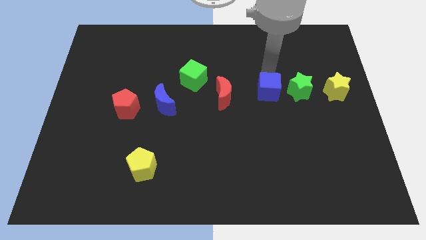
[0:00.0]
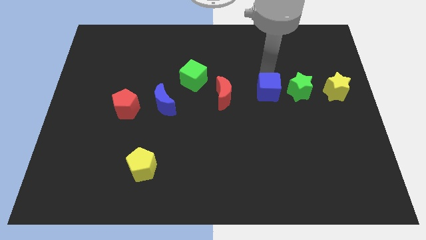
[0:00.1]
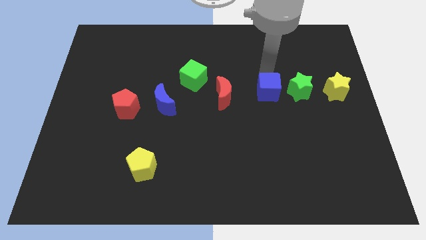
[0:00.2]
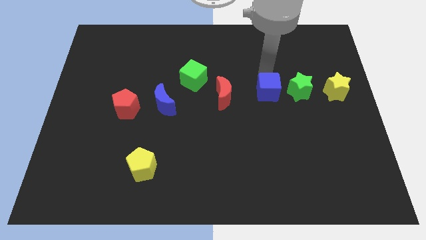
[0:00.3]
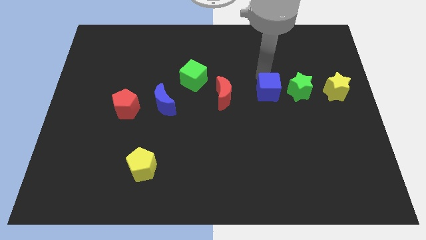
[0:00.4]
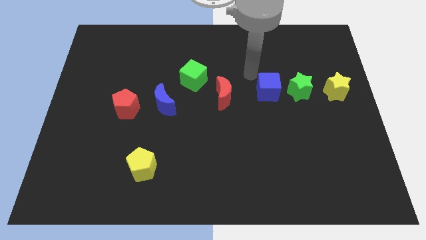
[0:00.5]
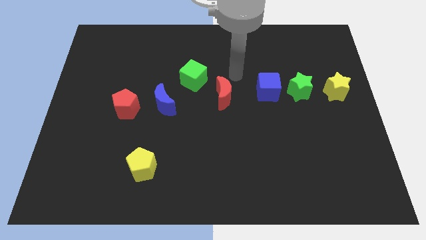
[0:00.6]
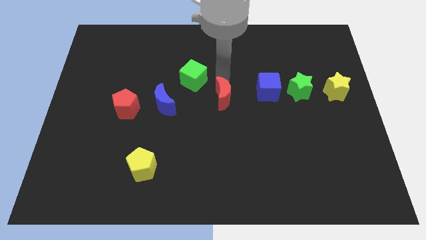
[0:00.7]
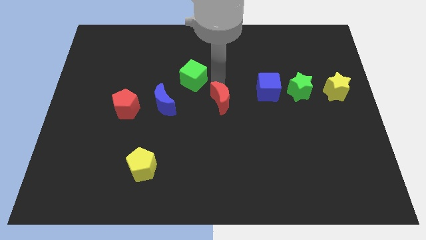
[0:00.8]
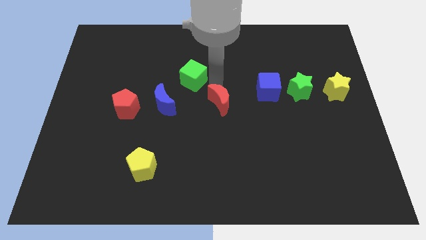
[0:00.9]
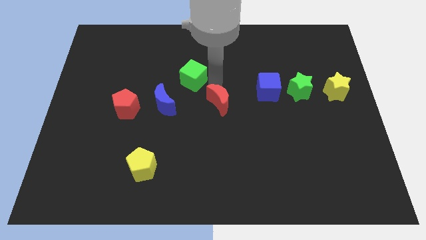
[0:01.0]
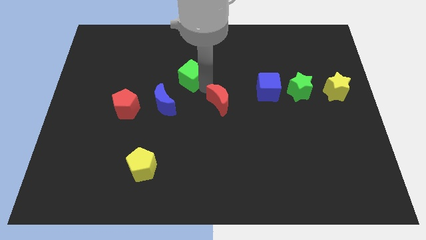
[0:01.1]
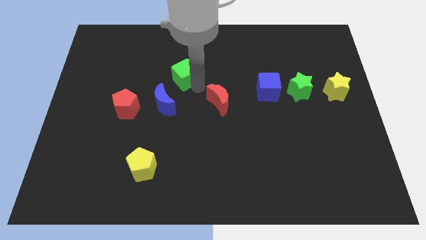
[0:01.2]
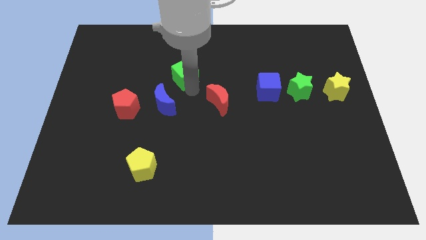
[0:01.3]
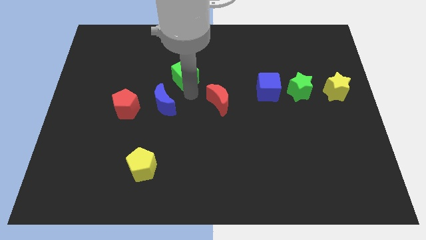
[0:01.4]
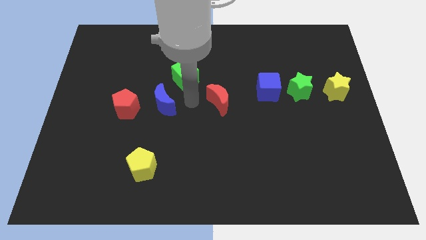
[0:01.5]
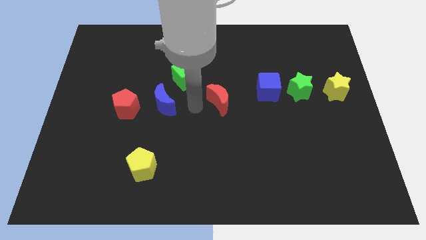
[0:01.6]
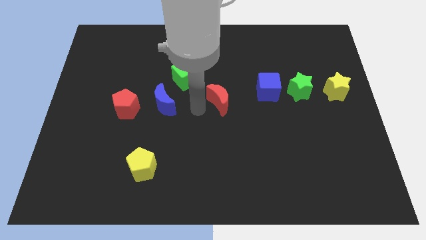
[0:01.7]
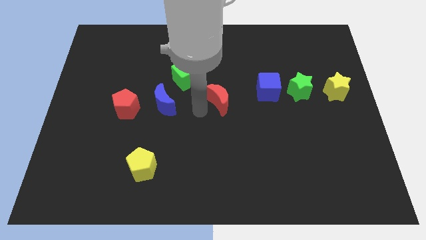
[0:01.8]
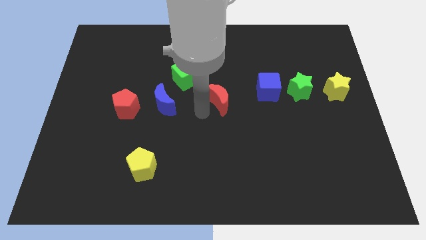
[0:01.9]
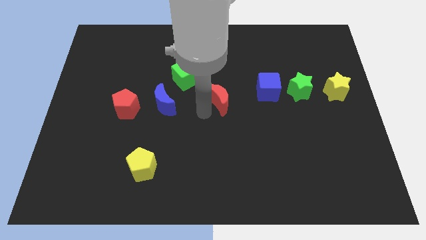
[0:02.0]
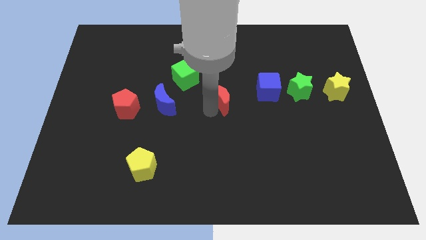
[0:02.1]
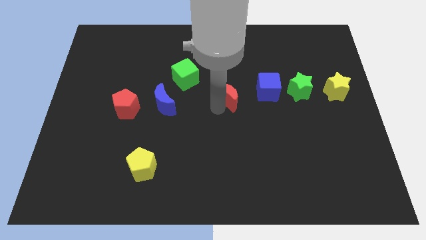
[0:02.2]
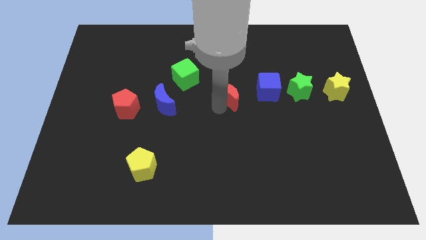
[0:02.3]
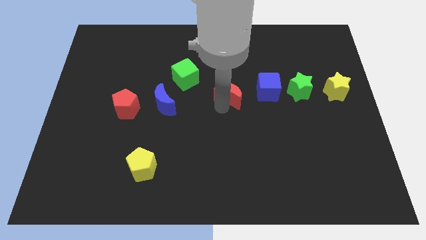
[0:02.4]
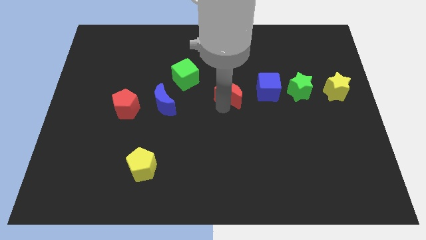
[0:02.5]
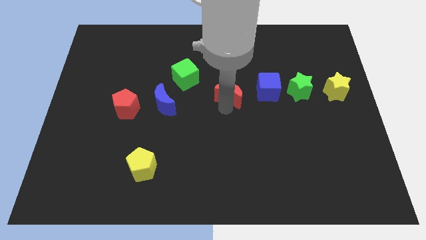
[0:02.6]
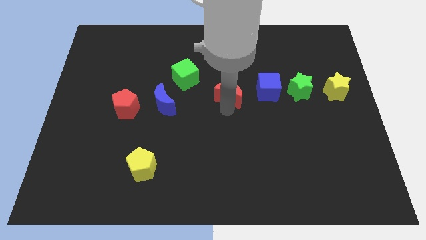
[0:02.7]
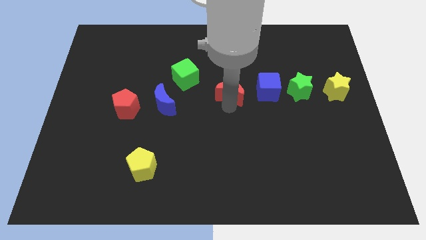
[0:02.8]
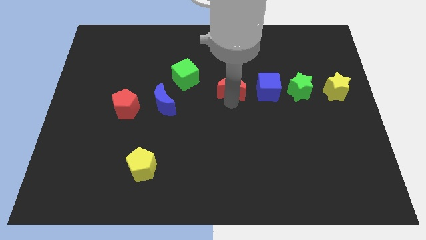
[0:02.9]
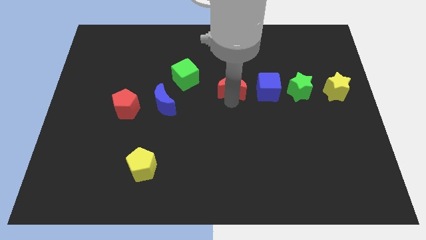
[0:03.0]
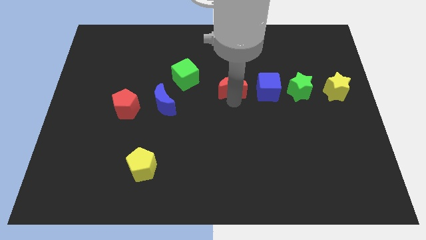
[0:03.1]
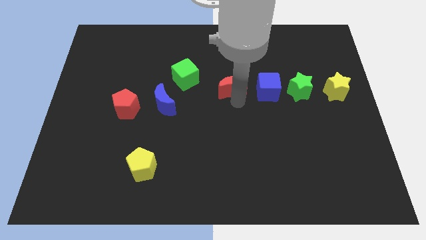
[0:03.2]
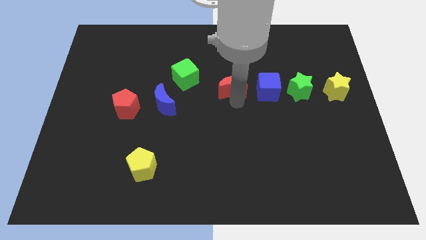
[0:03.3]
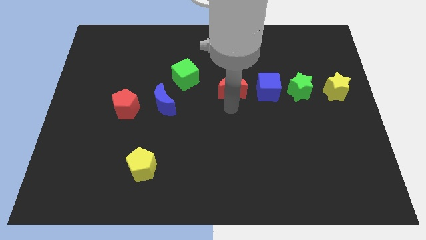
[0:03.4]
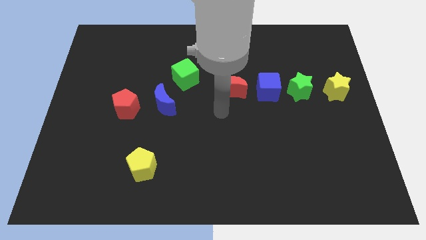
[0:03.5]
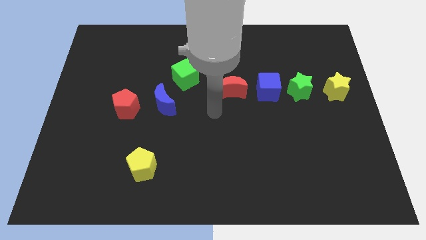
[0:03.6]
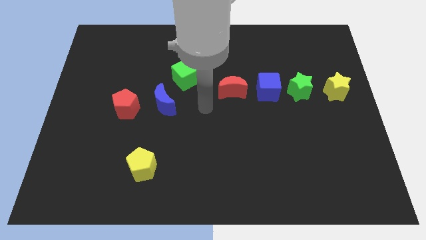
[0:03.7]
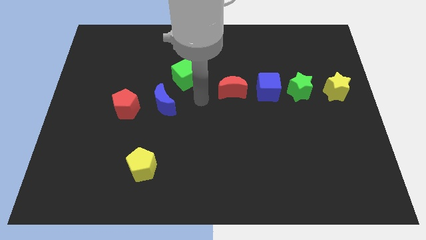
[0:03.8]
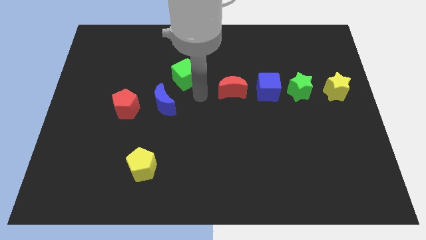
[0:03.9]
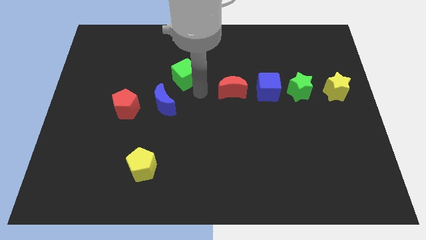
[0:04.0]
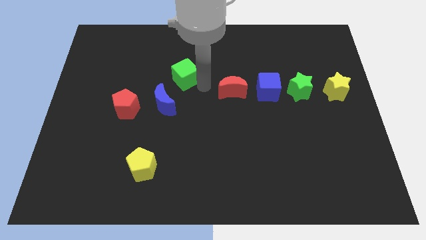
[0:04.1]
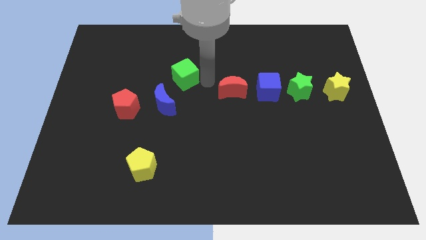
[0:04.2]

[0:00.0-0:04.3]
slide the green cube diagonally to the top right side of the red moon

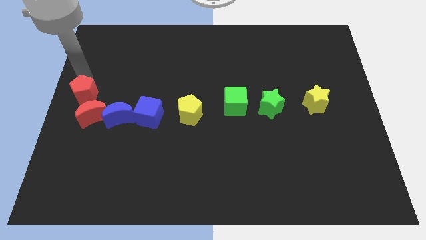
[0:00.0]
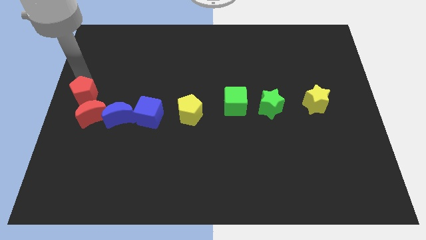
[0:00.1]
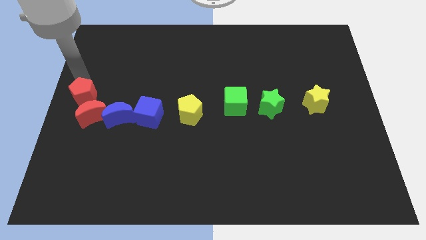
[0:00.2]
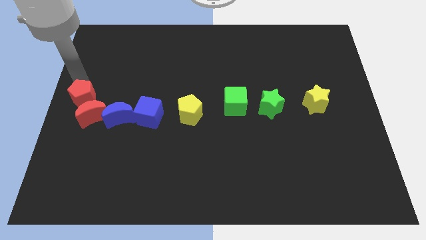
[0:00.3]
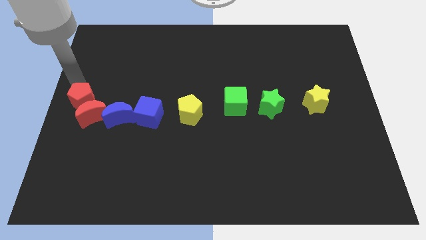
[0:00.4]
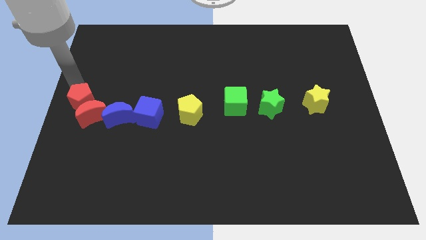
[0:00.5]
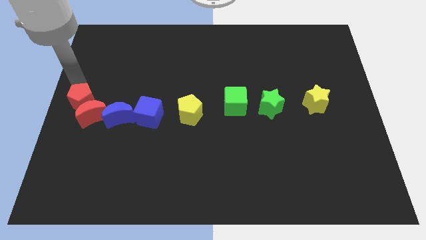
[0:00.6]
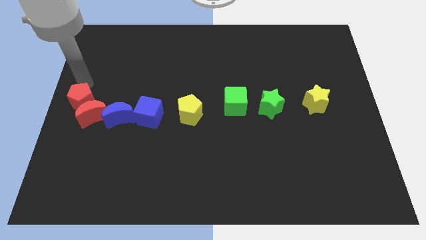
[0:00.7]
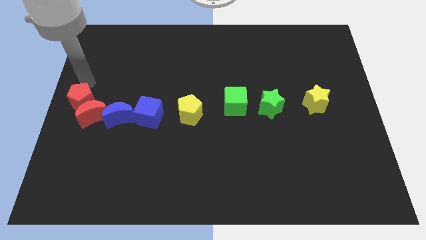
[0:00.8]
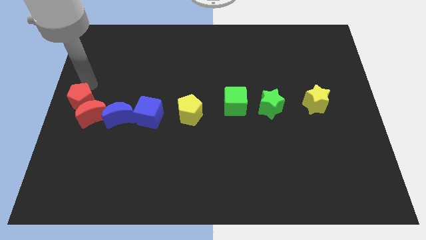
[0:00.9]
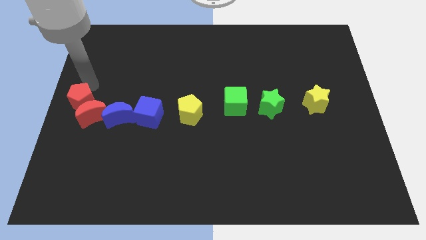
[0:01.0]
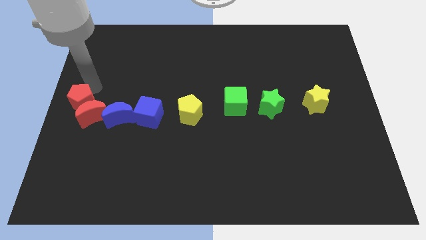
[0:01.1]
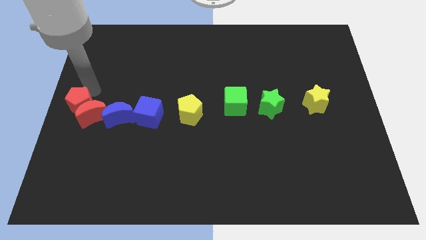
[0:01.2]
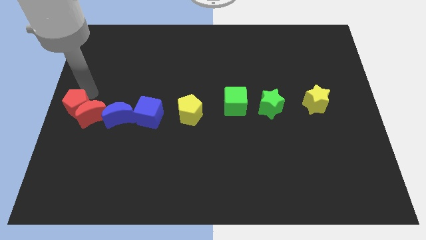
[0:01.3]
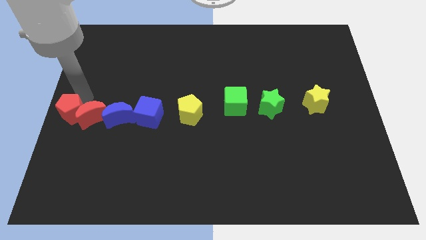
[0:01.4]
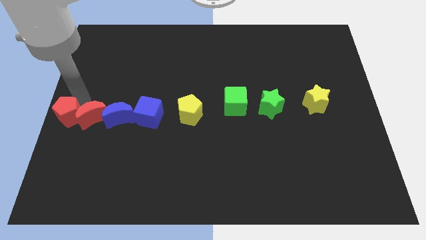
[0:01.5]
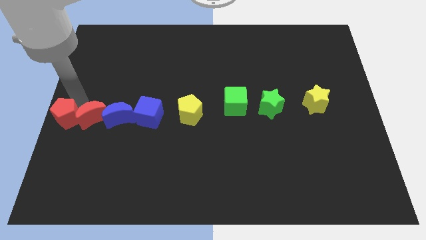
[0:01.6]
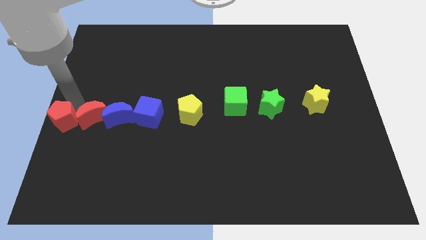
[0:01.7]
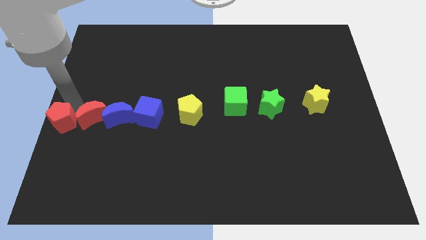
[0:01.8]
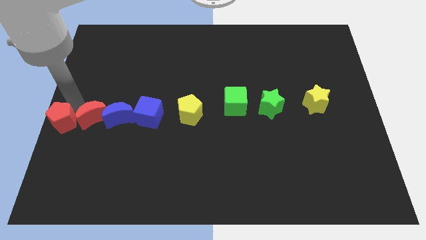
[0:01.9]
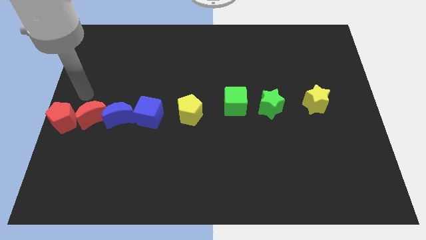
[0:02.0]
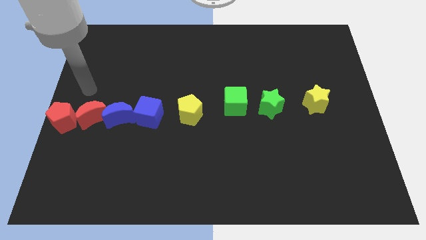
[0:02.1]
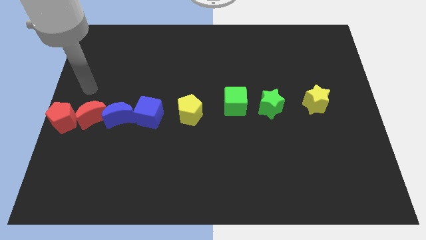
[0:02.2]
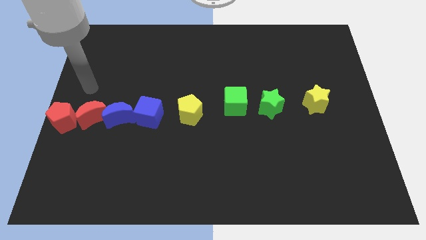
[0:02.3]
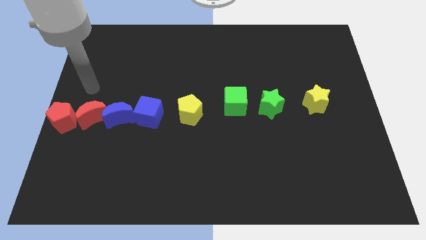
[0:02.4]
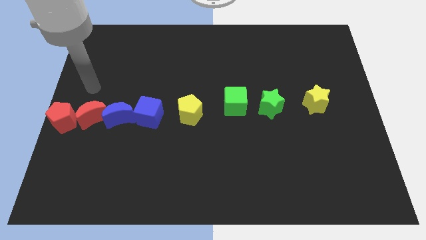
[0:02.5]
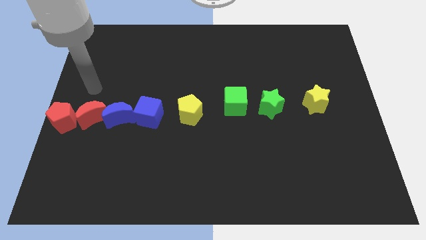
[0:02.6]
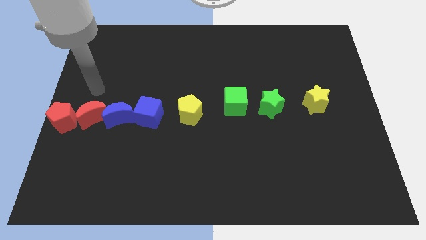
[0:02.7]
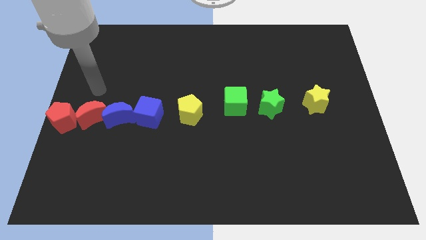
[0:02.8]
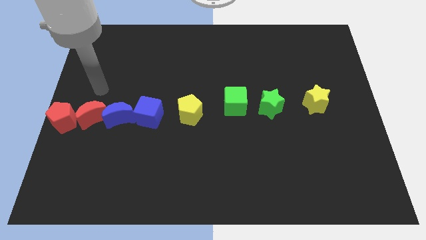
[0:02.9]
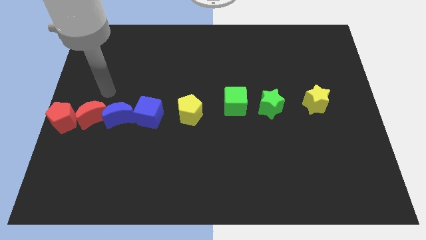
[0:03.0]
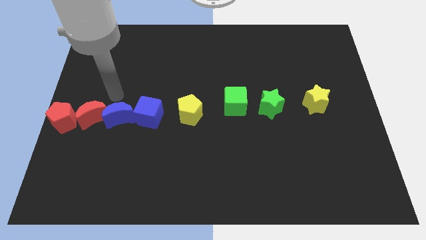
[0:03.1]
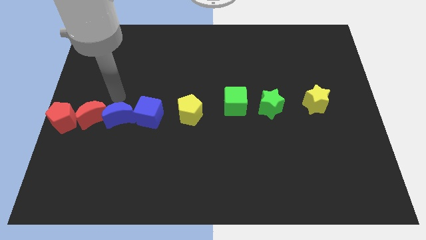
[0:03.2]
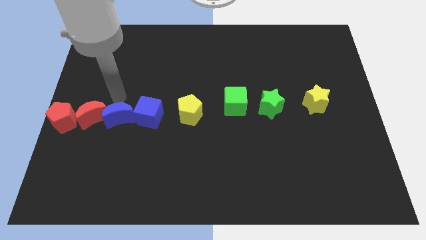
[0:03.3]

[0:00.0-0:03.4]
place your arm above the blue moon

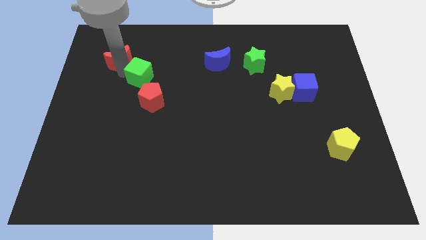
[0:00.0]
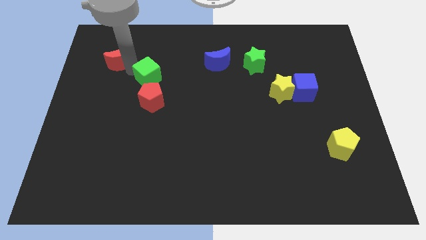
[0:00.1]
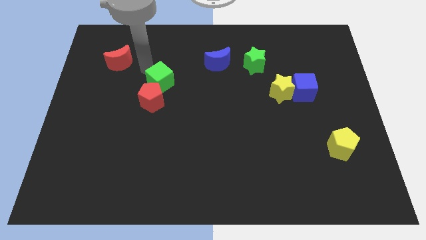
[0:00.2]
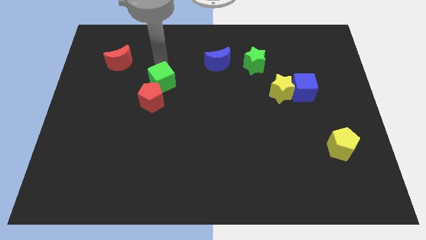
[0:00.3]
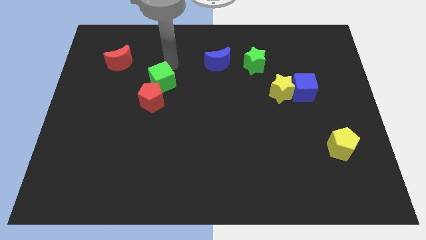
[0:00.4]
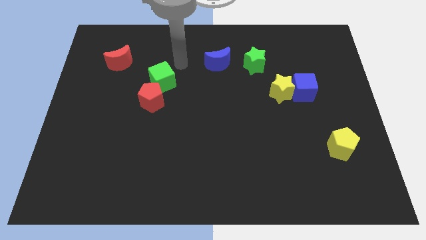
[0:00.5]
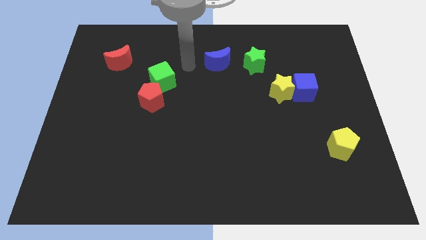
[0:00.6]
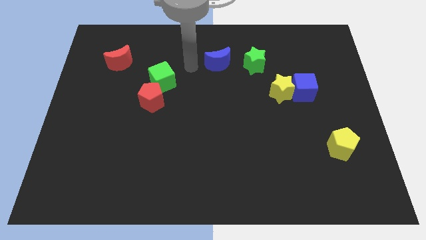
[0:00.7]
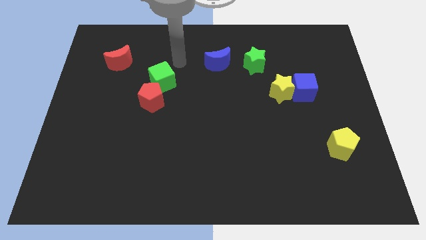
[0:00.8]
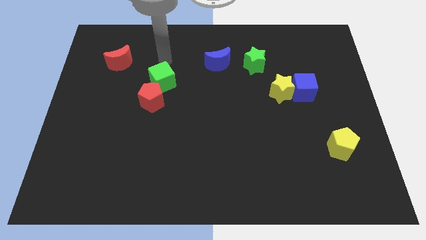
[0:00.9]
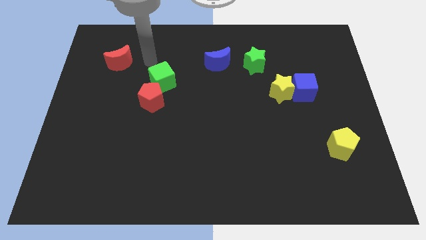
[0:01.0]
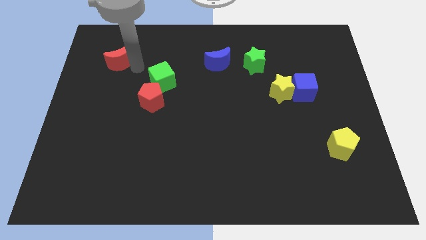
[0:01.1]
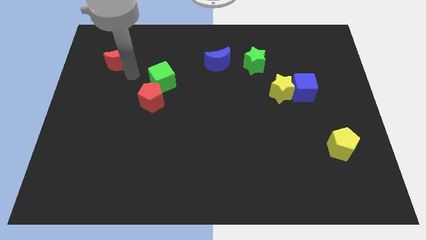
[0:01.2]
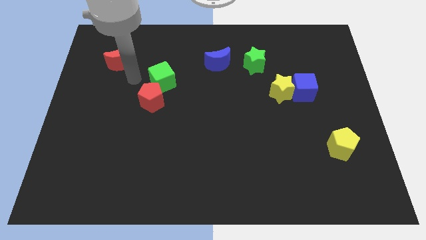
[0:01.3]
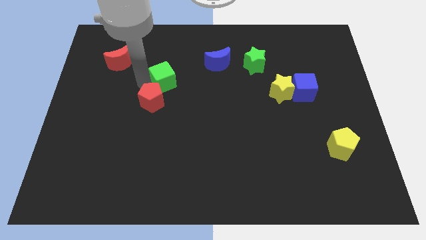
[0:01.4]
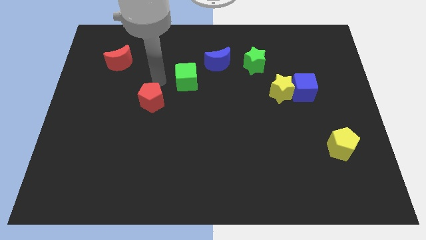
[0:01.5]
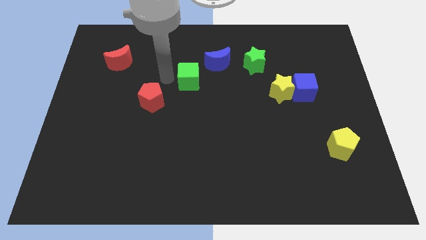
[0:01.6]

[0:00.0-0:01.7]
put the green cube between the red pentagon and blue moon
